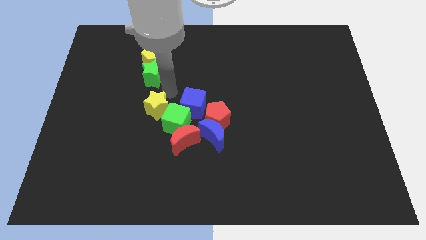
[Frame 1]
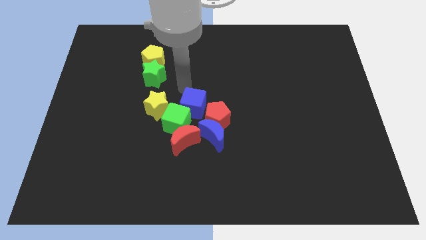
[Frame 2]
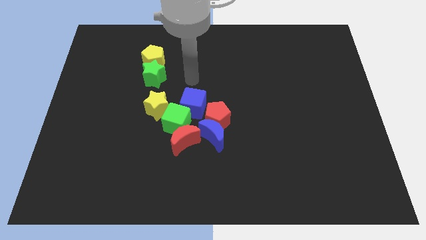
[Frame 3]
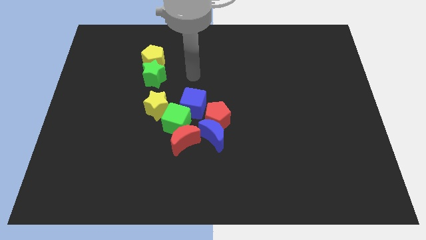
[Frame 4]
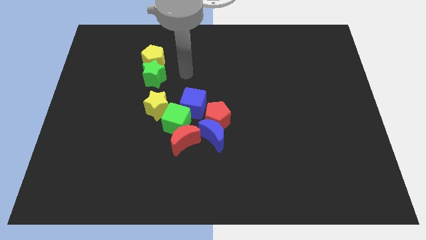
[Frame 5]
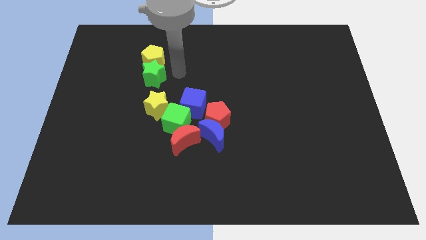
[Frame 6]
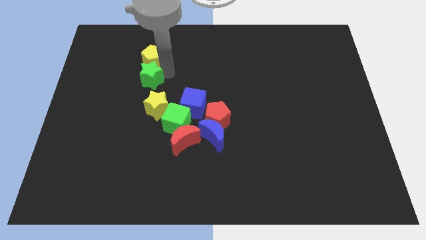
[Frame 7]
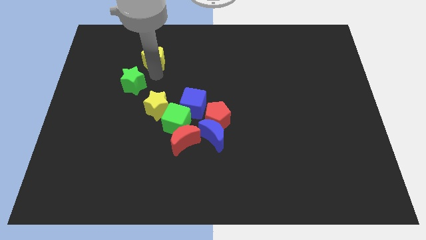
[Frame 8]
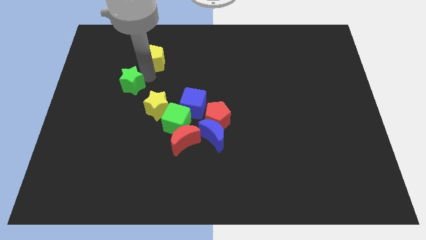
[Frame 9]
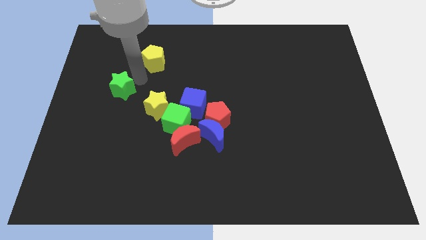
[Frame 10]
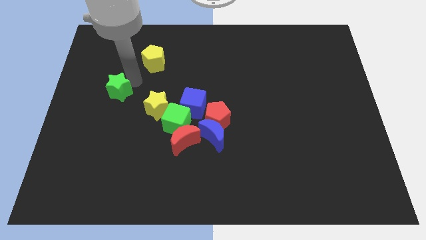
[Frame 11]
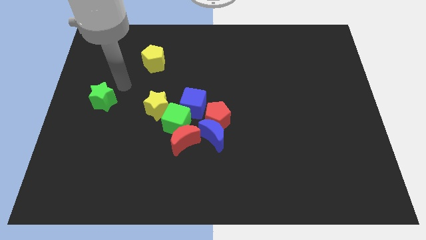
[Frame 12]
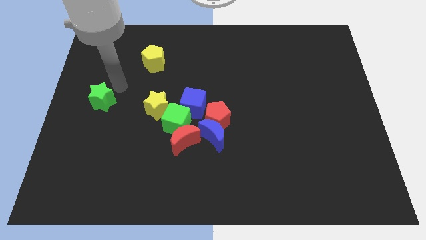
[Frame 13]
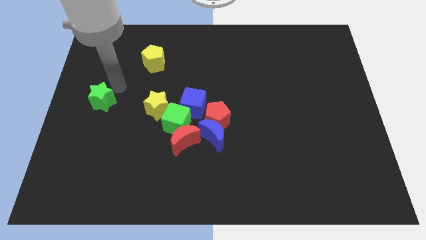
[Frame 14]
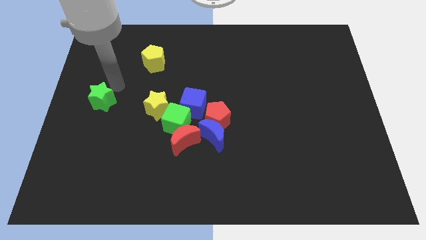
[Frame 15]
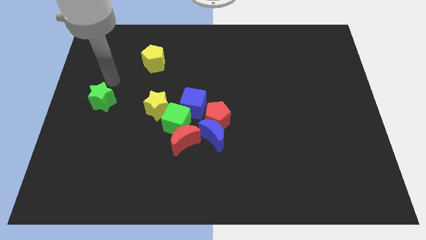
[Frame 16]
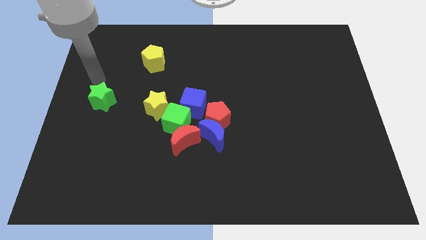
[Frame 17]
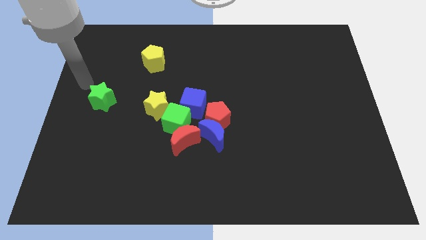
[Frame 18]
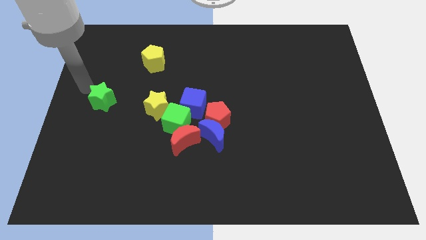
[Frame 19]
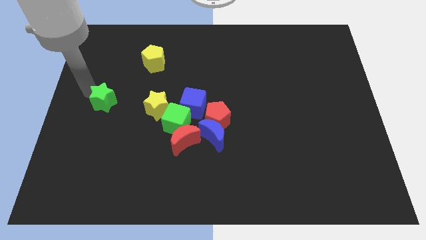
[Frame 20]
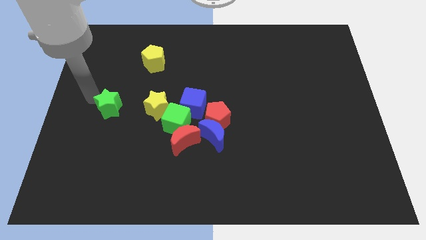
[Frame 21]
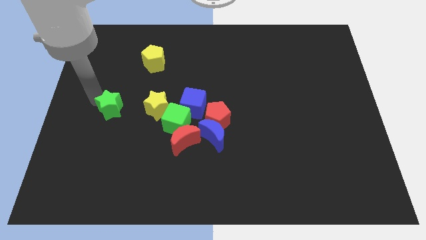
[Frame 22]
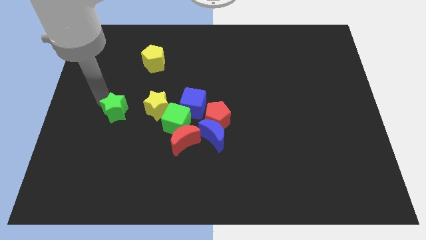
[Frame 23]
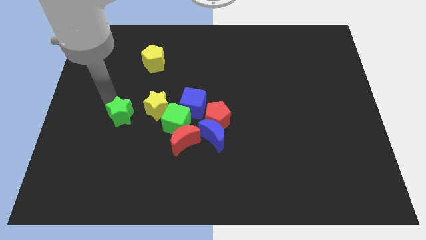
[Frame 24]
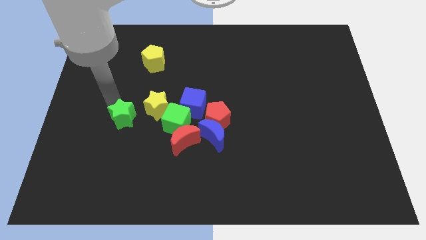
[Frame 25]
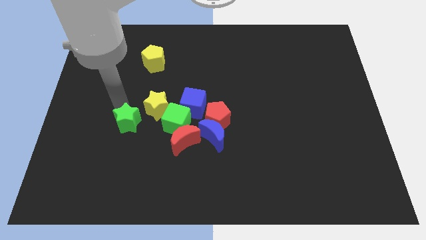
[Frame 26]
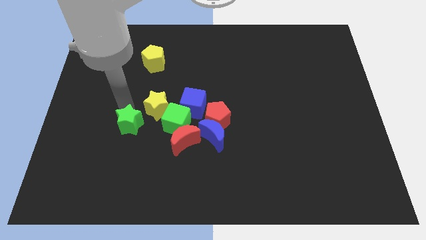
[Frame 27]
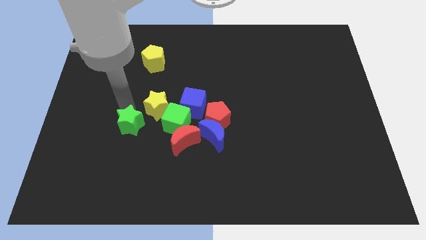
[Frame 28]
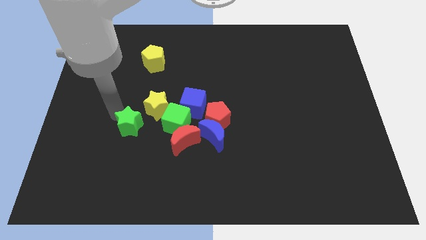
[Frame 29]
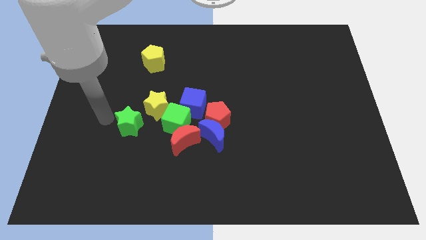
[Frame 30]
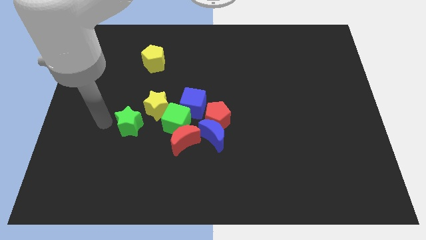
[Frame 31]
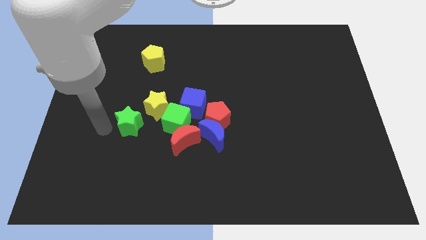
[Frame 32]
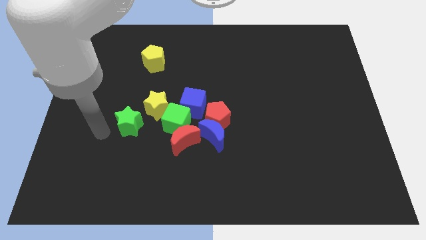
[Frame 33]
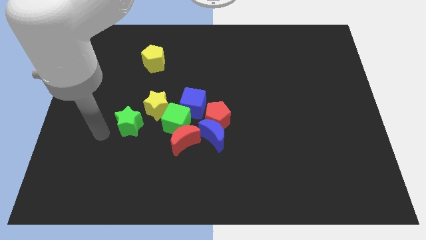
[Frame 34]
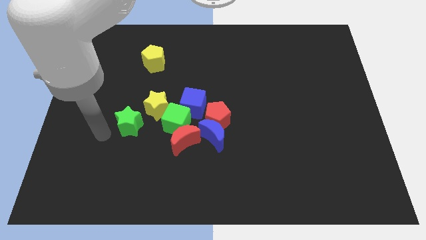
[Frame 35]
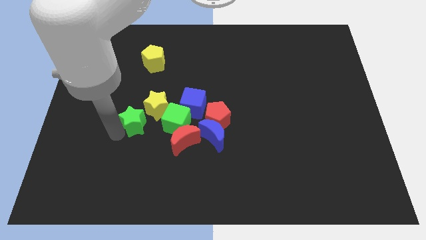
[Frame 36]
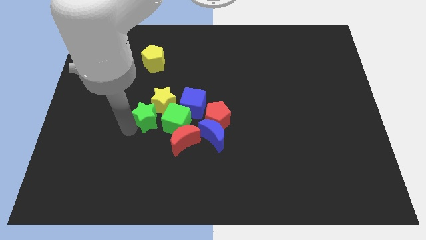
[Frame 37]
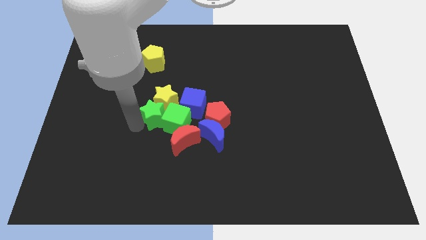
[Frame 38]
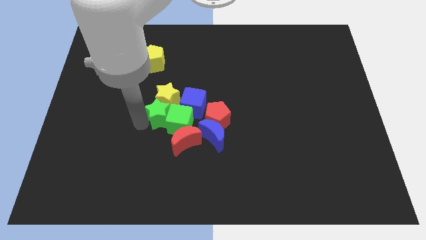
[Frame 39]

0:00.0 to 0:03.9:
move green star into group of blocks

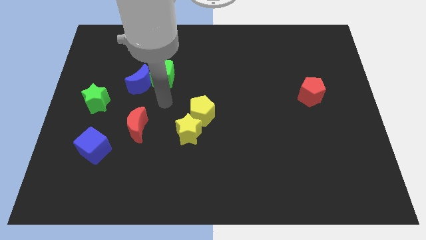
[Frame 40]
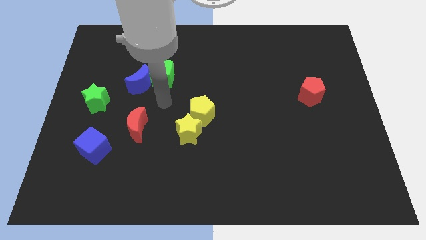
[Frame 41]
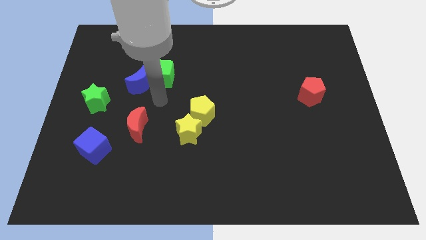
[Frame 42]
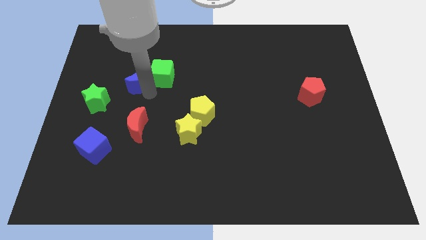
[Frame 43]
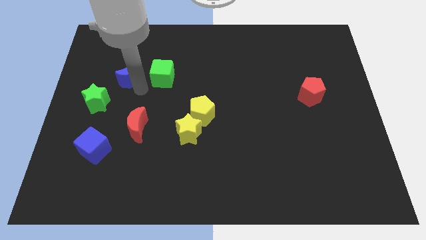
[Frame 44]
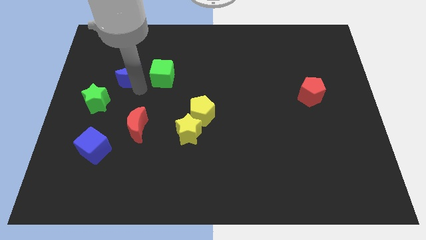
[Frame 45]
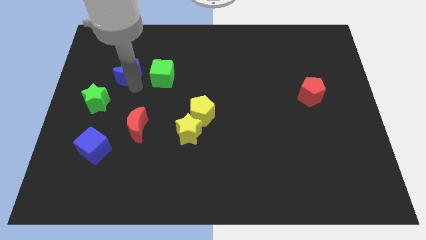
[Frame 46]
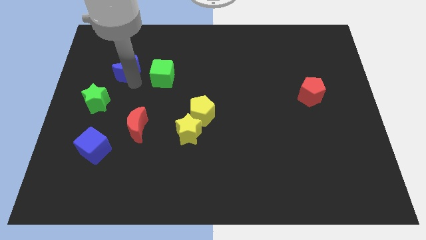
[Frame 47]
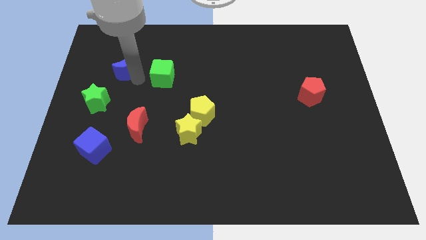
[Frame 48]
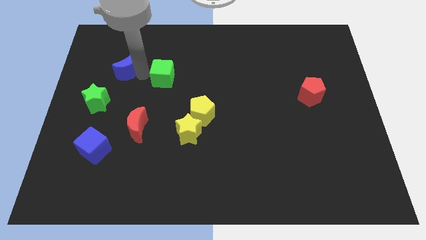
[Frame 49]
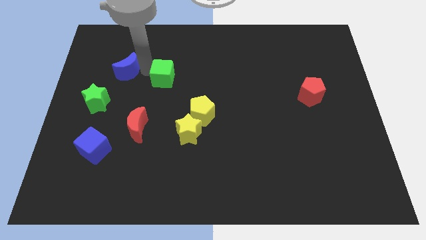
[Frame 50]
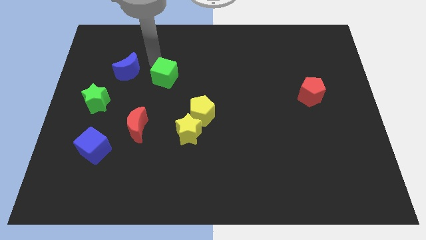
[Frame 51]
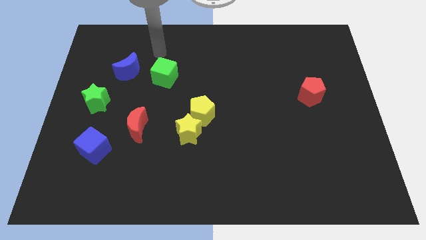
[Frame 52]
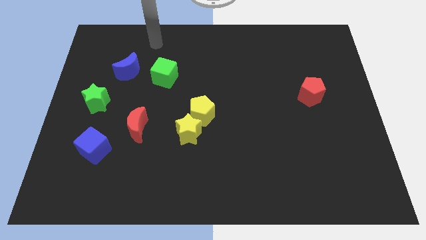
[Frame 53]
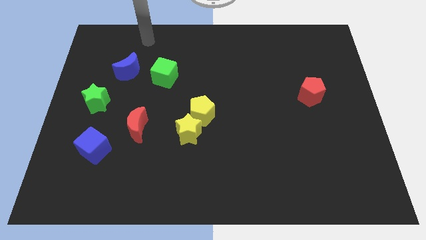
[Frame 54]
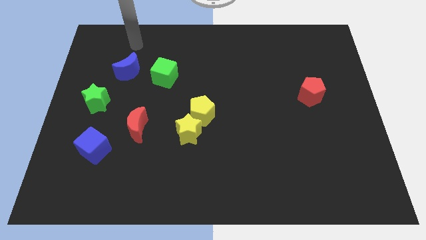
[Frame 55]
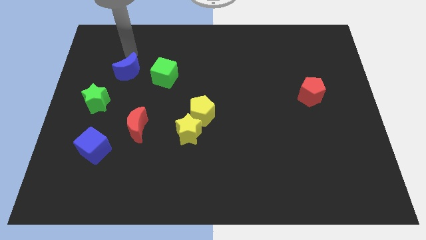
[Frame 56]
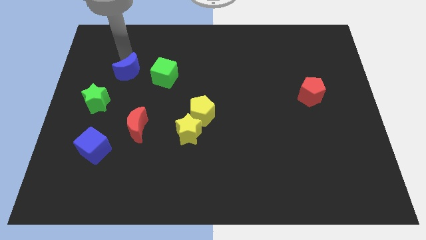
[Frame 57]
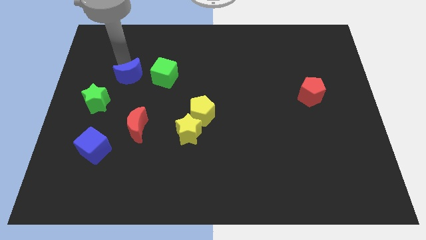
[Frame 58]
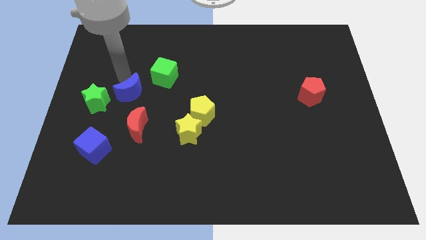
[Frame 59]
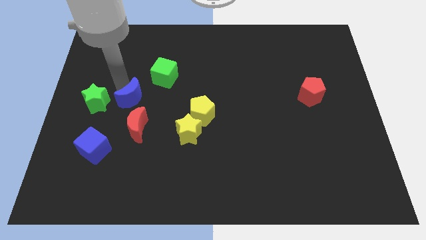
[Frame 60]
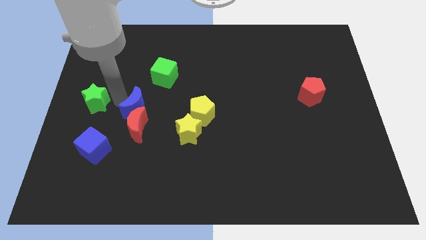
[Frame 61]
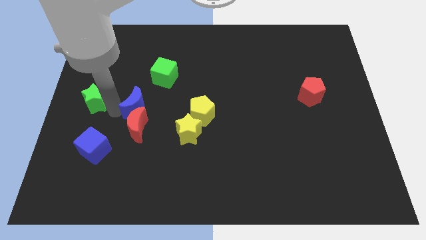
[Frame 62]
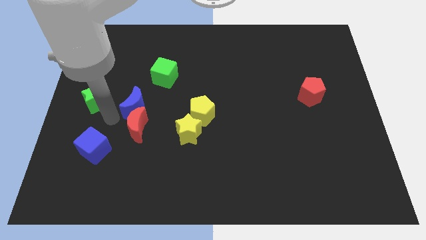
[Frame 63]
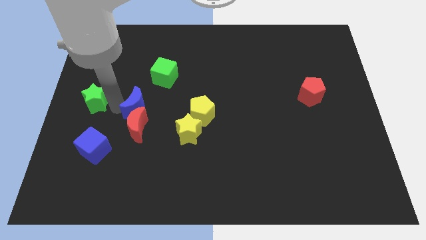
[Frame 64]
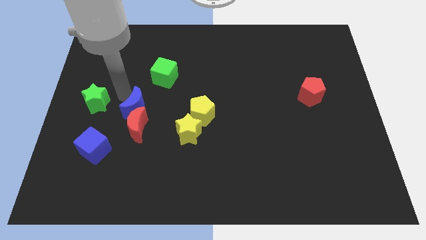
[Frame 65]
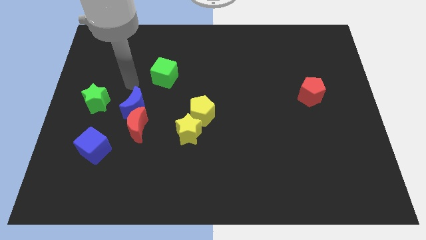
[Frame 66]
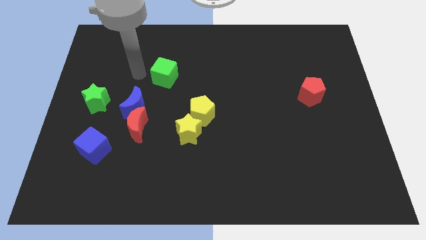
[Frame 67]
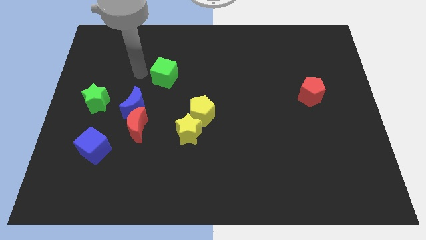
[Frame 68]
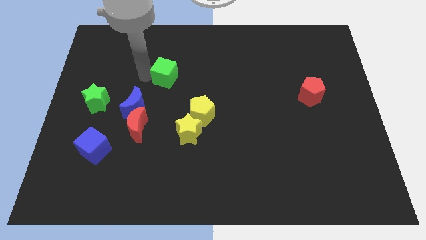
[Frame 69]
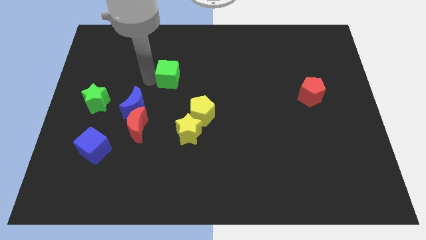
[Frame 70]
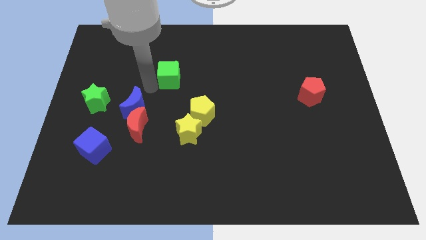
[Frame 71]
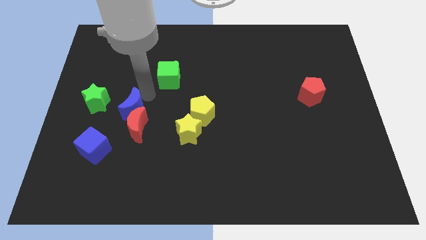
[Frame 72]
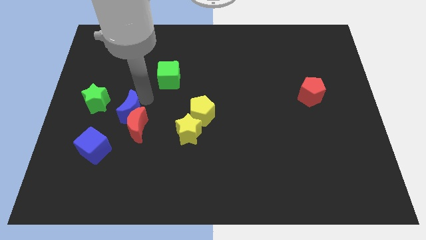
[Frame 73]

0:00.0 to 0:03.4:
slide the blue moon diagonally bottom left of the green cube

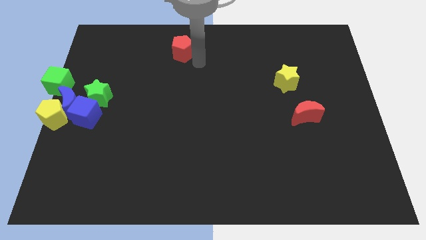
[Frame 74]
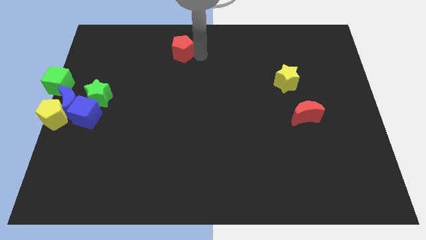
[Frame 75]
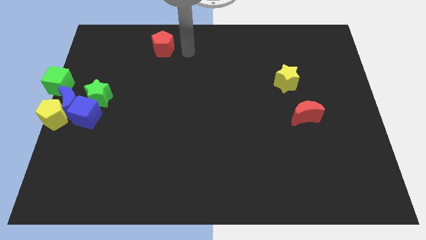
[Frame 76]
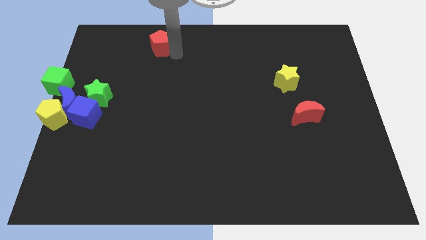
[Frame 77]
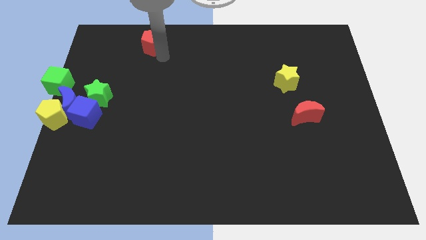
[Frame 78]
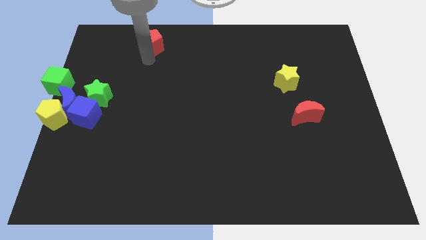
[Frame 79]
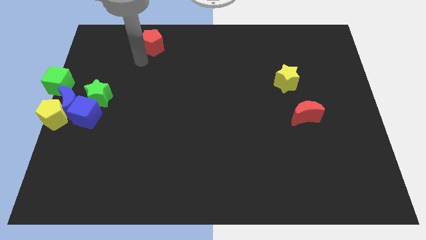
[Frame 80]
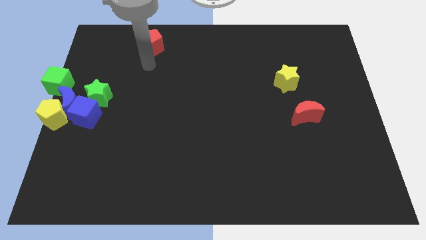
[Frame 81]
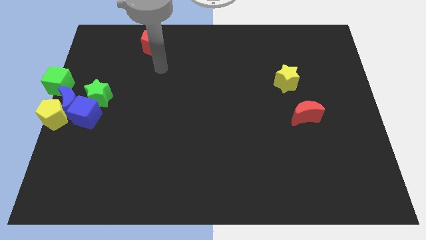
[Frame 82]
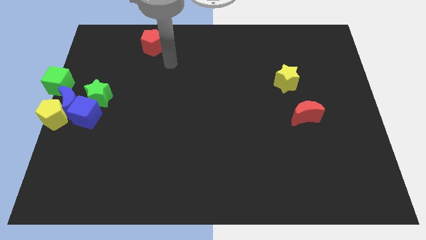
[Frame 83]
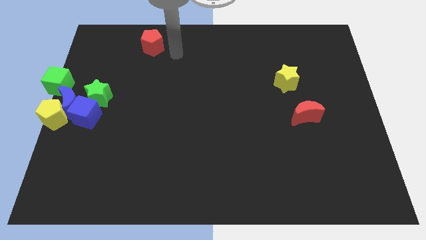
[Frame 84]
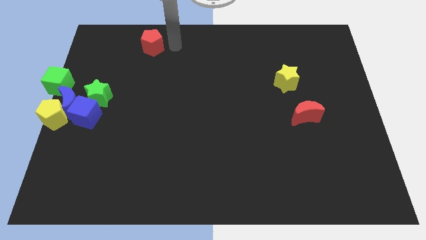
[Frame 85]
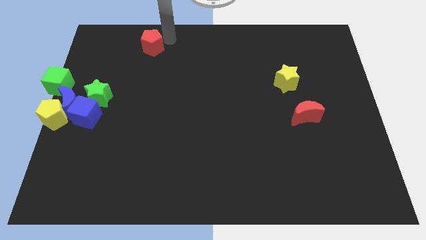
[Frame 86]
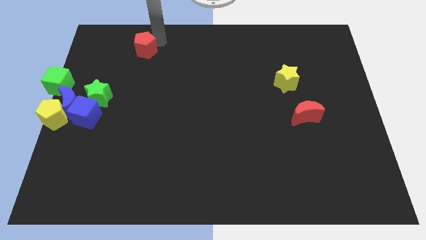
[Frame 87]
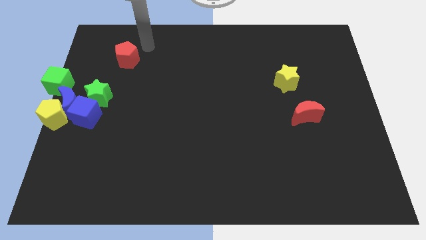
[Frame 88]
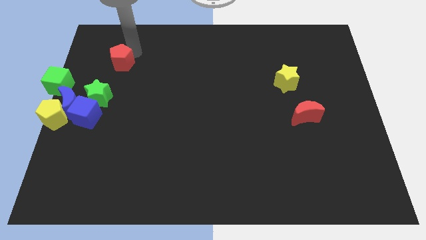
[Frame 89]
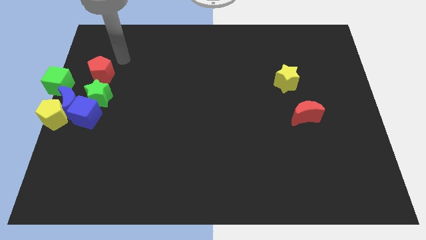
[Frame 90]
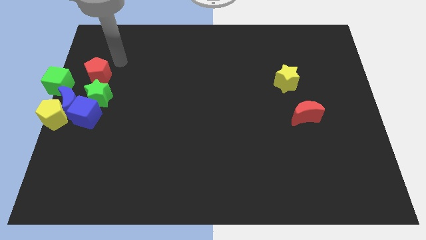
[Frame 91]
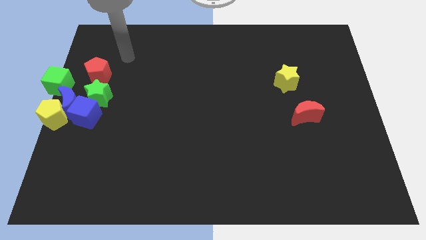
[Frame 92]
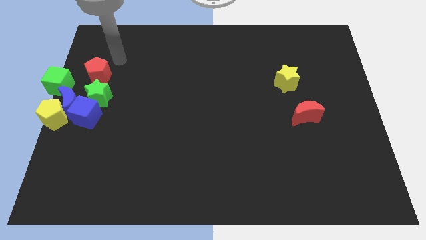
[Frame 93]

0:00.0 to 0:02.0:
move the red pentagon above the green star
